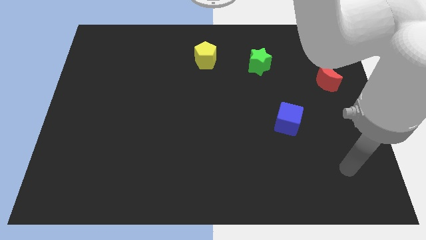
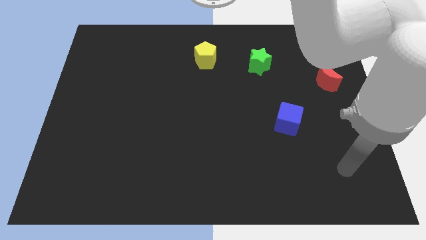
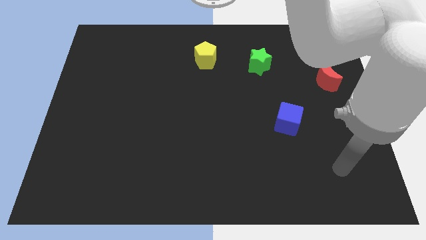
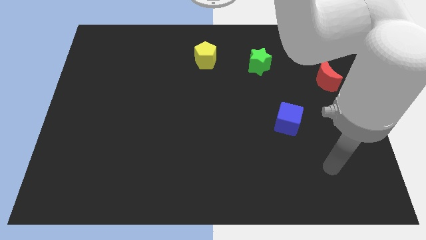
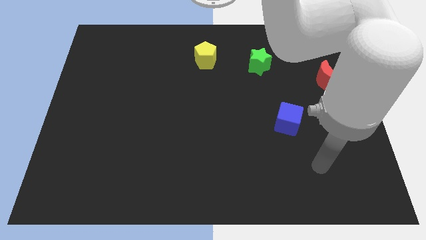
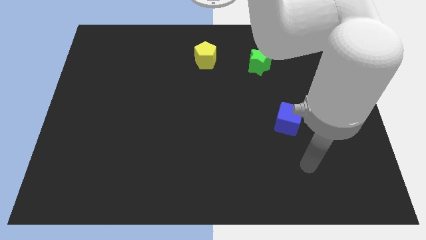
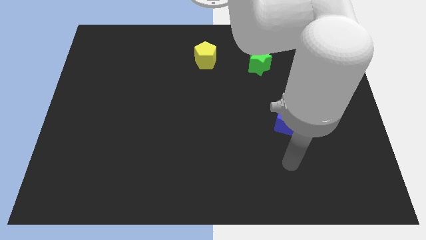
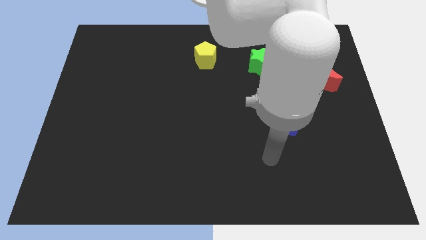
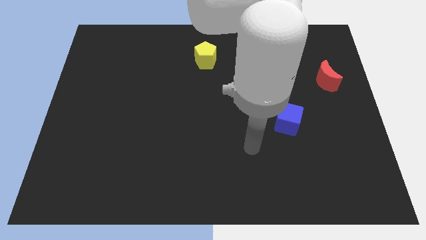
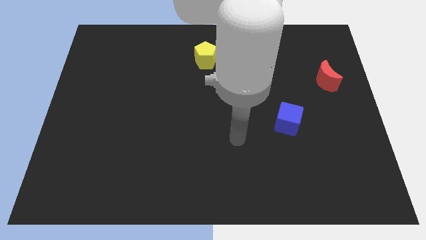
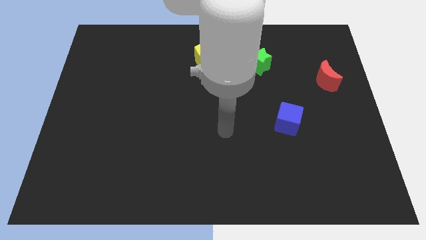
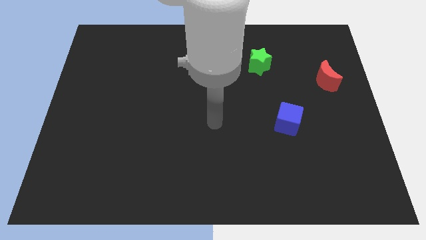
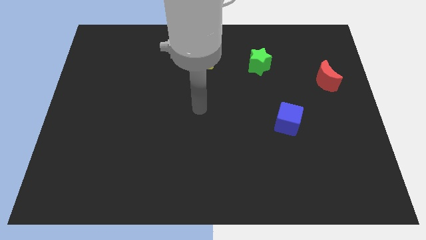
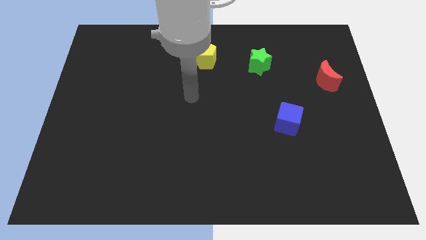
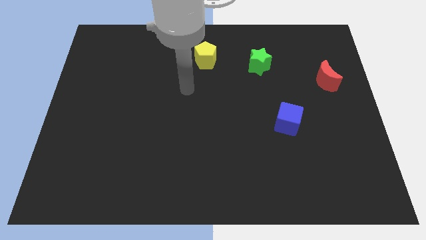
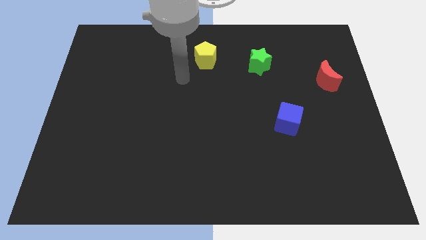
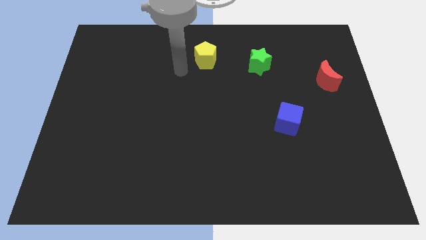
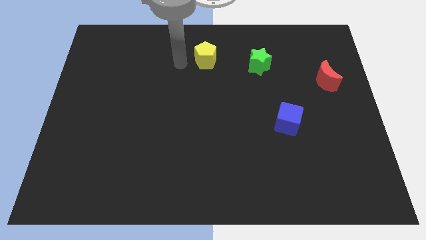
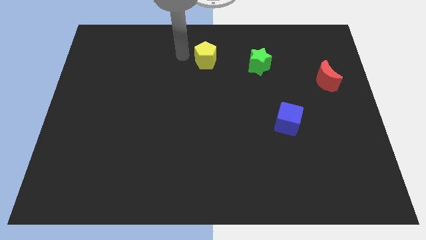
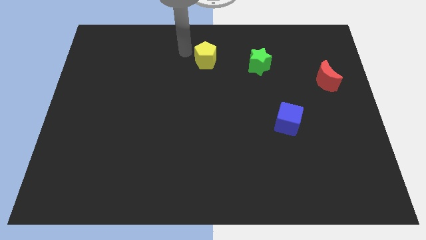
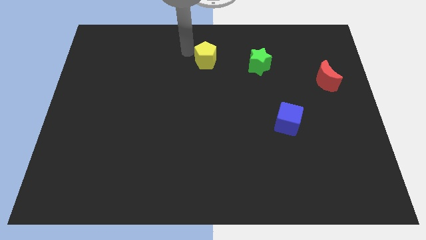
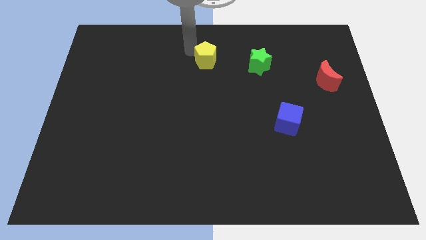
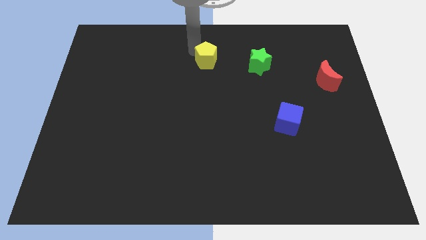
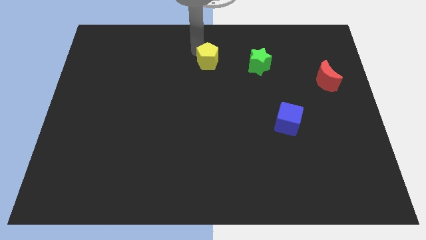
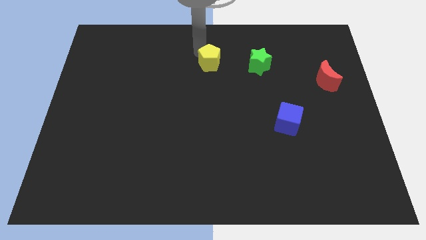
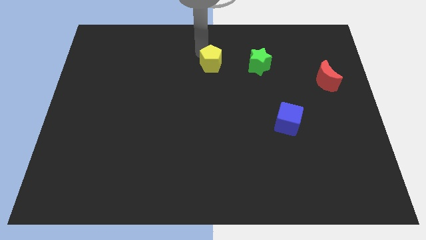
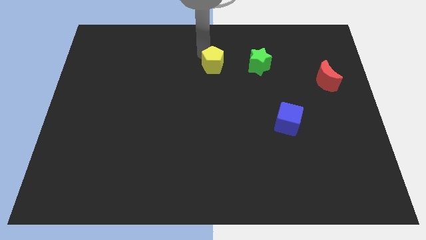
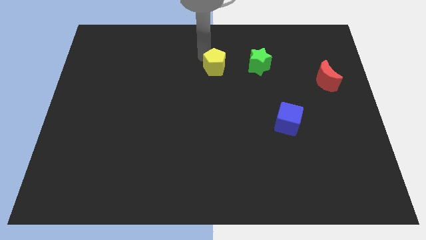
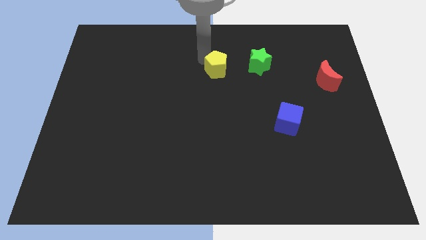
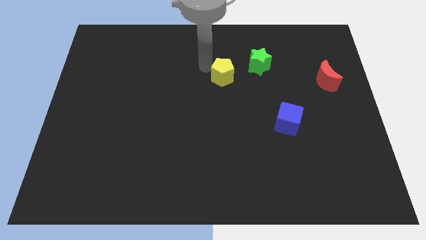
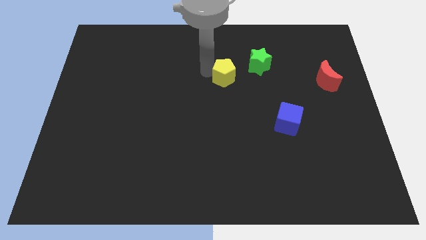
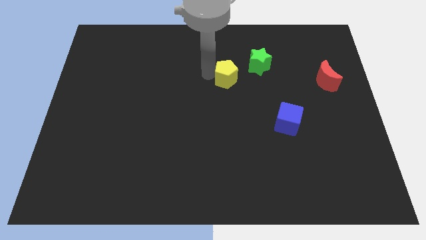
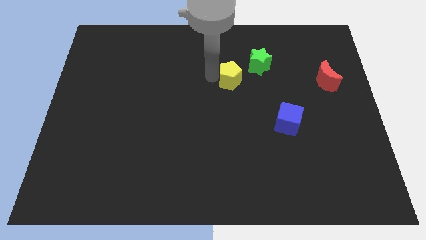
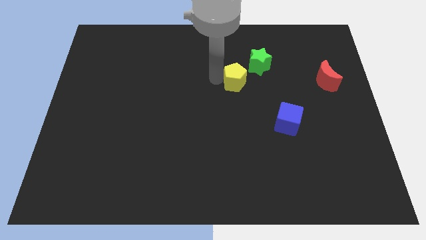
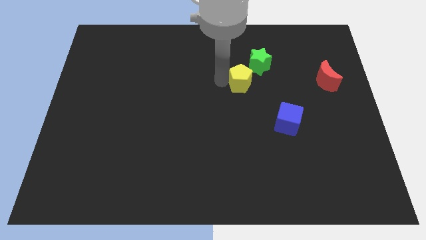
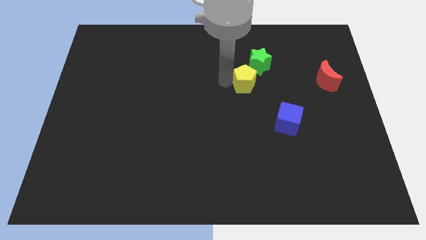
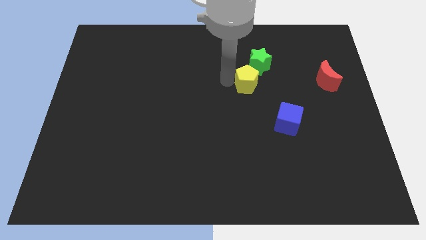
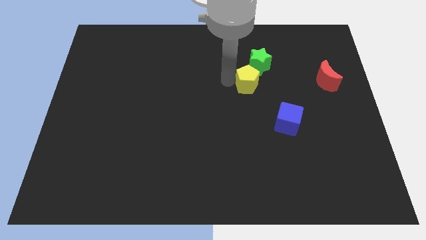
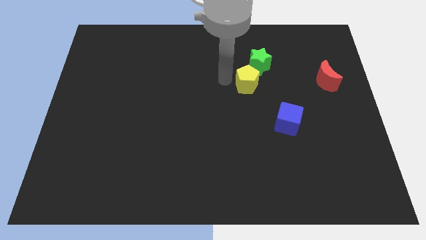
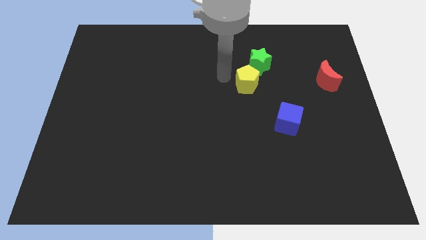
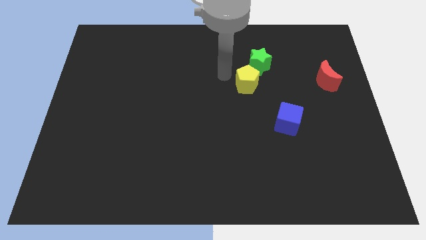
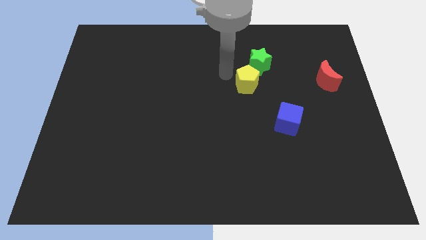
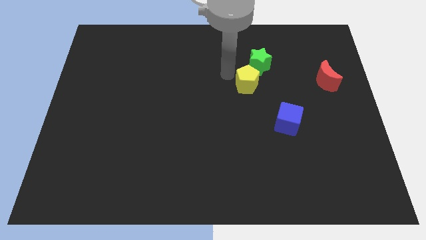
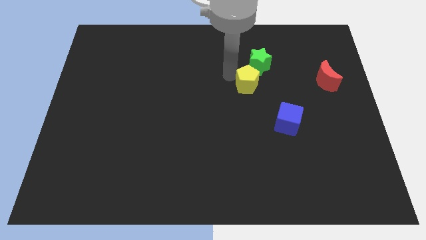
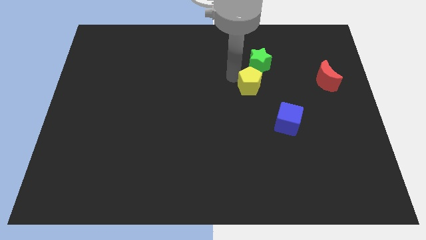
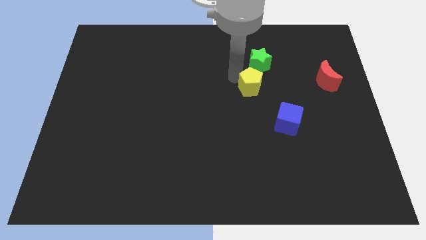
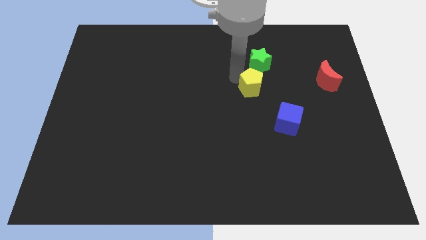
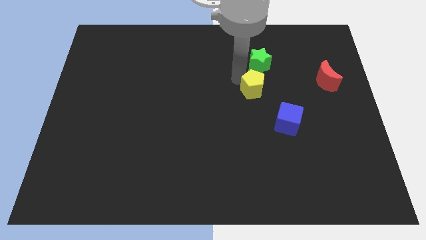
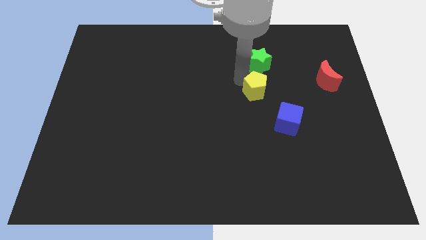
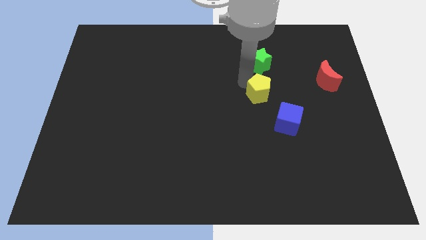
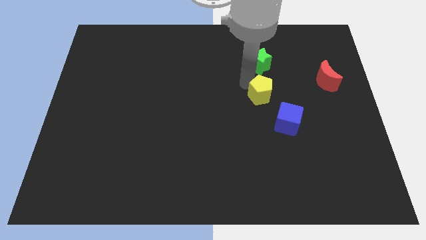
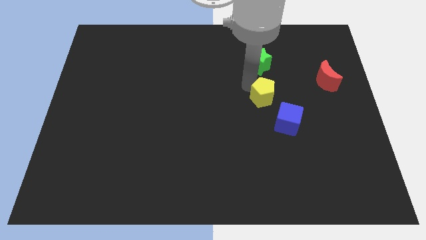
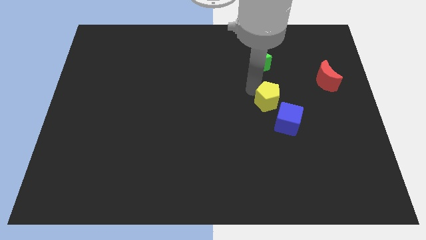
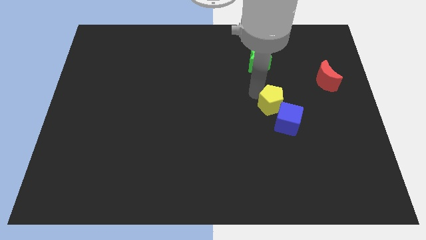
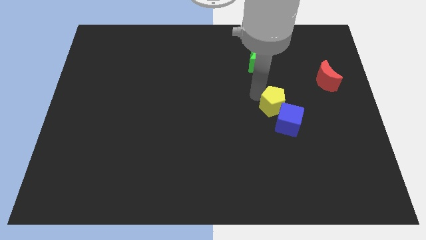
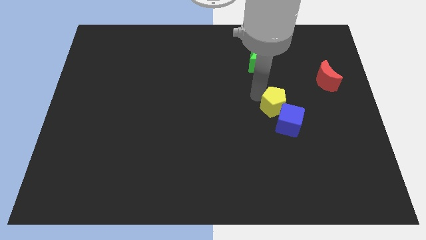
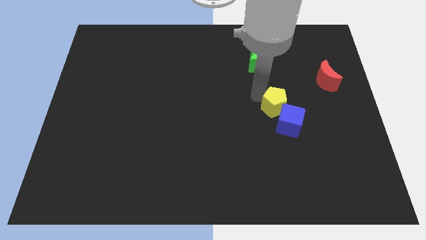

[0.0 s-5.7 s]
move the yellow block towards the blue block

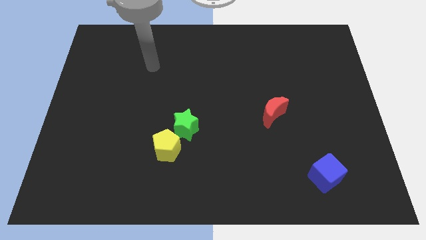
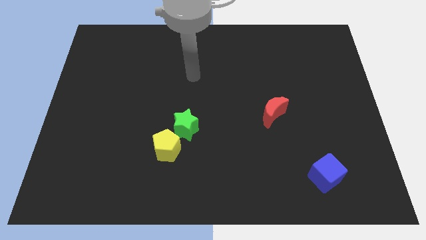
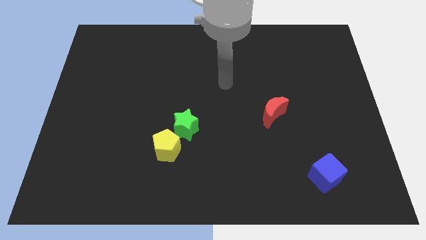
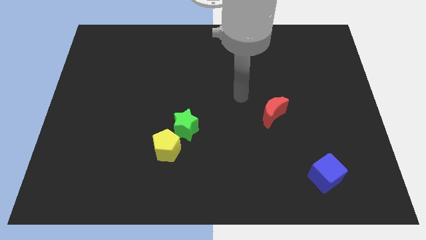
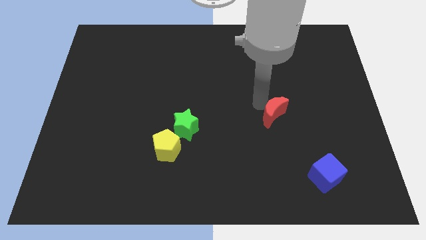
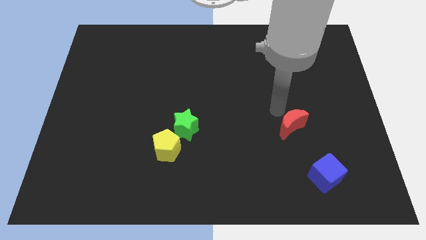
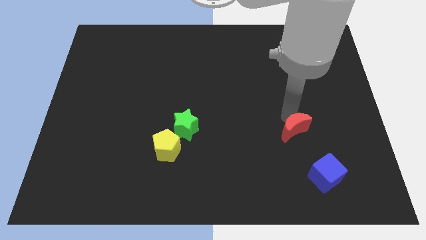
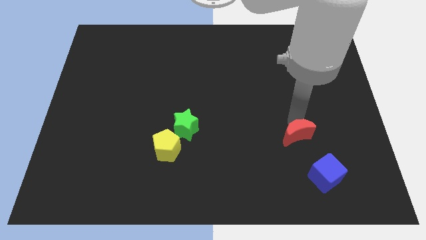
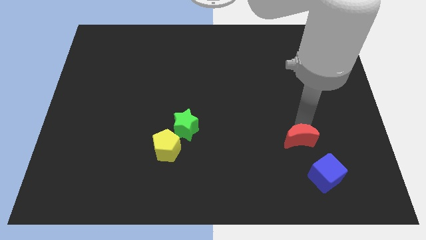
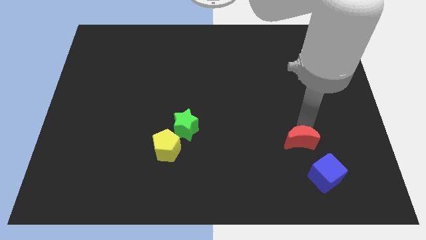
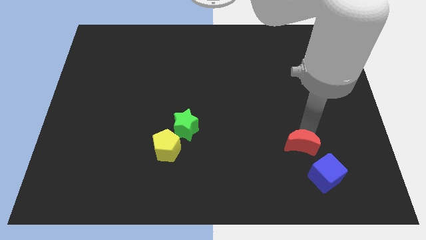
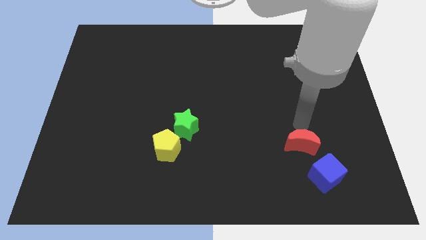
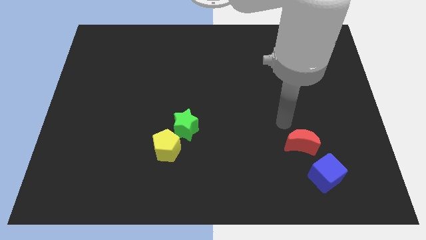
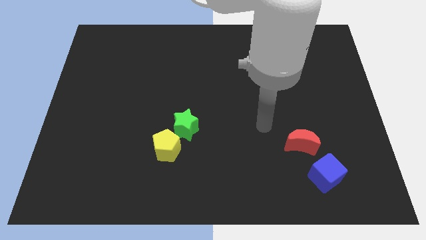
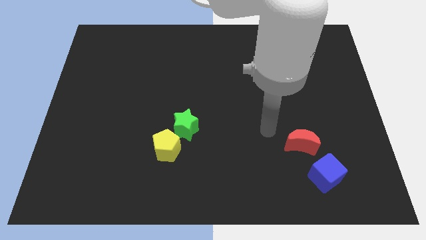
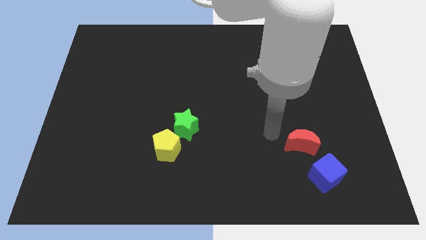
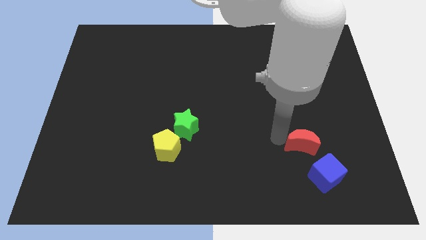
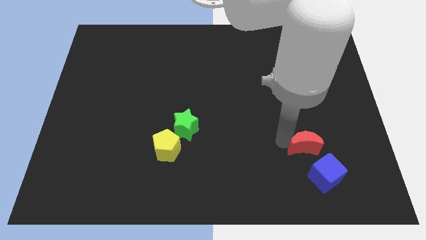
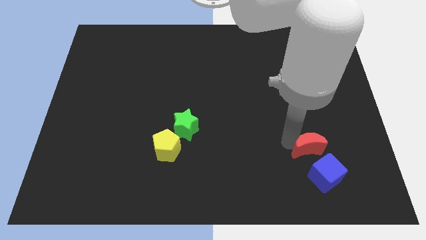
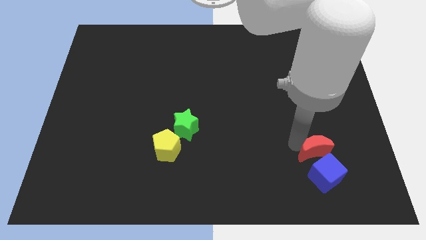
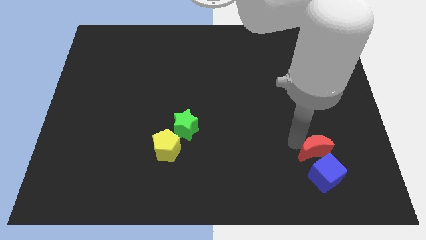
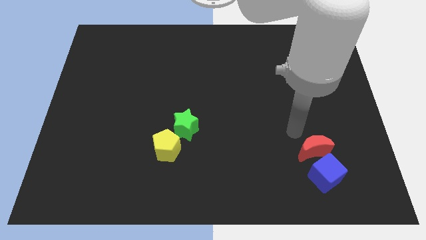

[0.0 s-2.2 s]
slide the red block towards the blue cube

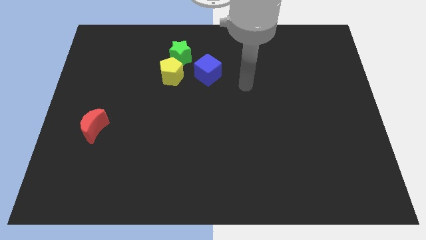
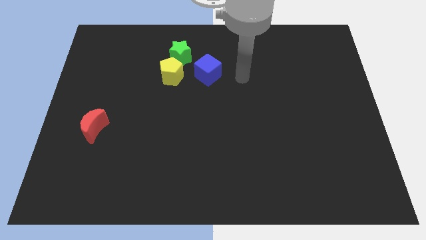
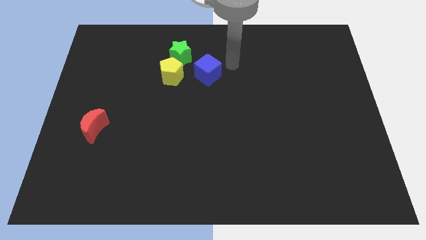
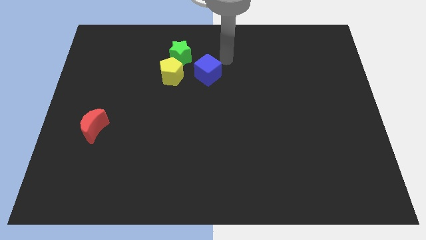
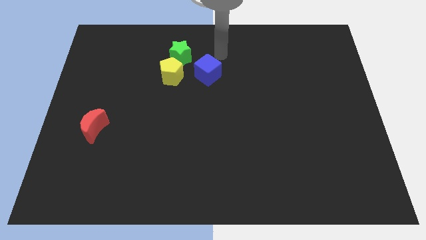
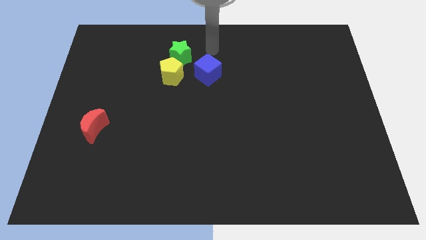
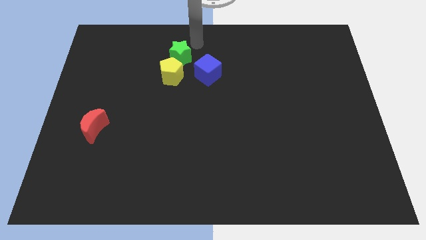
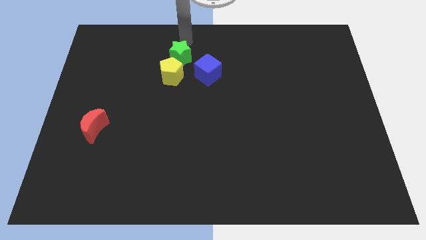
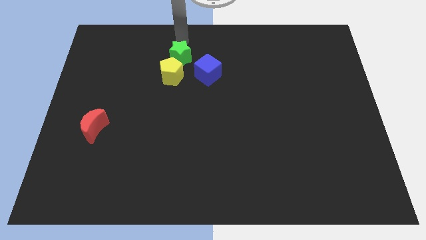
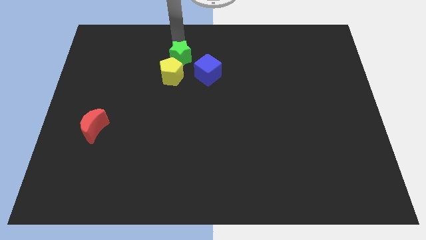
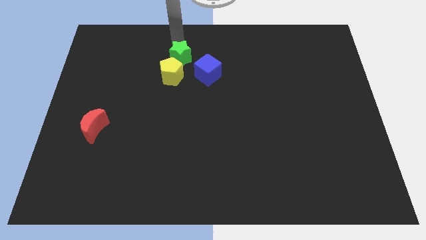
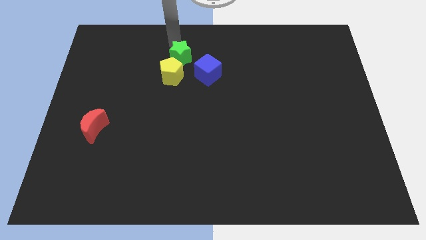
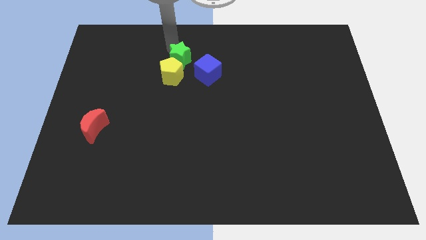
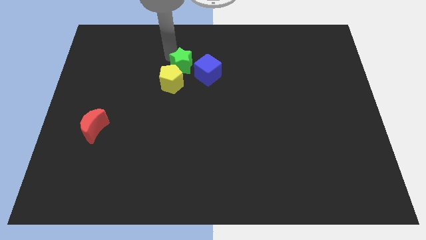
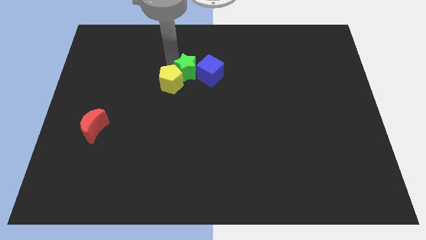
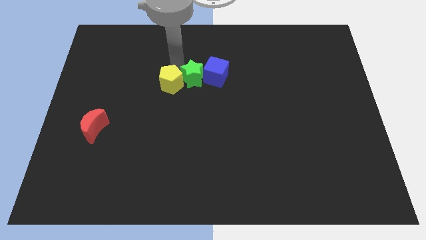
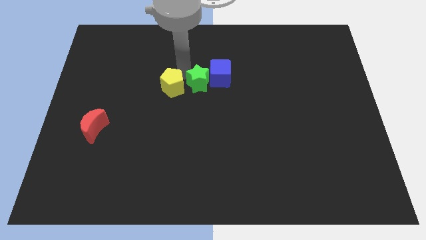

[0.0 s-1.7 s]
put the green block next to the blue cube
